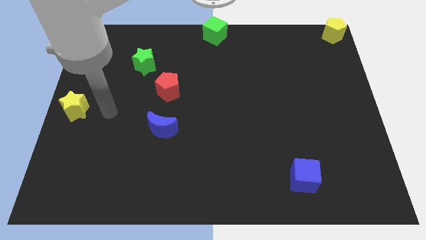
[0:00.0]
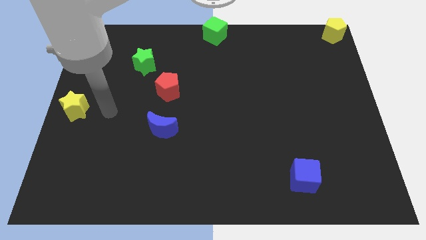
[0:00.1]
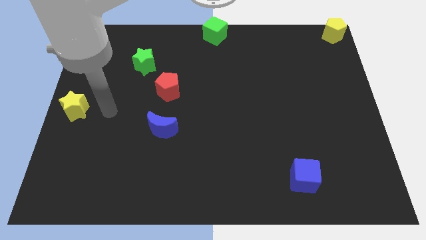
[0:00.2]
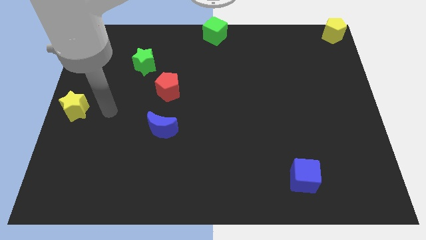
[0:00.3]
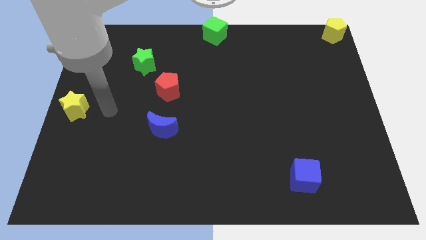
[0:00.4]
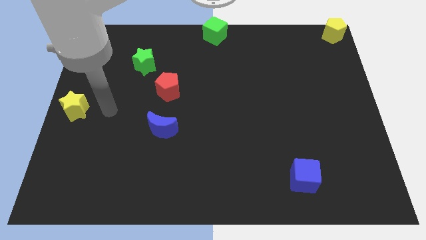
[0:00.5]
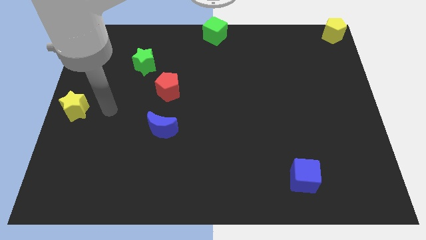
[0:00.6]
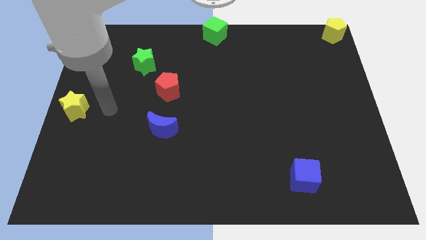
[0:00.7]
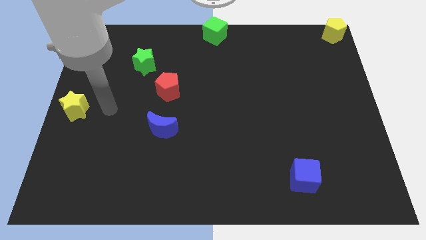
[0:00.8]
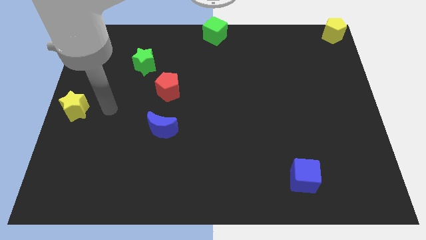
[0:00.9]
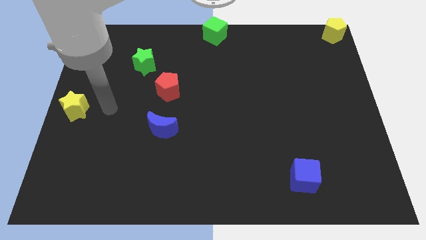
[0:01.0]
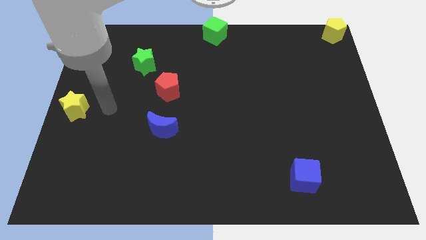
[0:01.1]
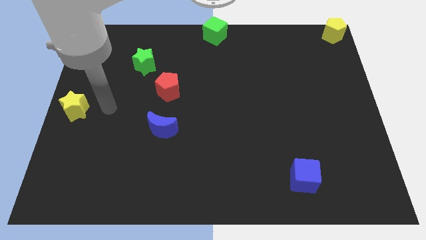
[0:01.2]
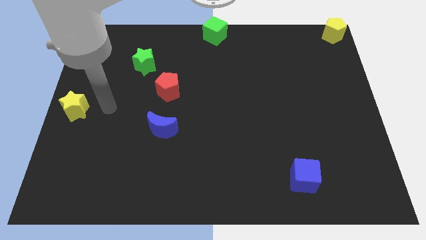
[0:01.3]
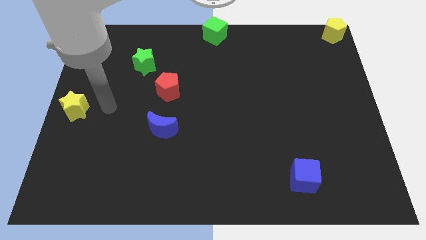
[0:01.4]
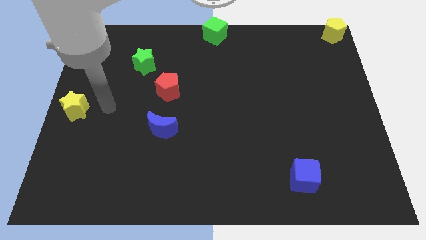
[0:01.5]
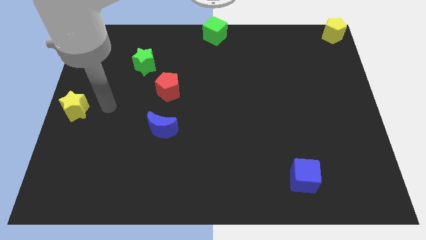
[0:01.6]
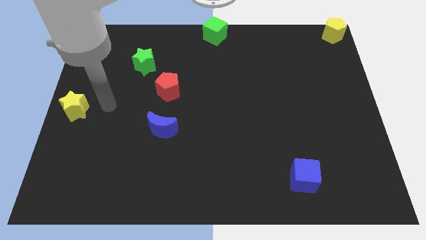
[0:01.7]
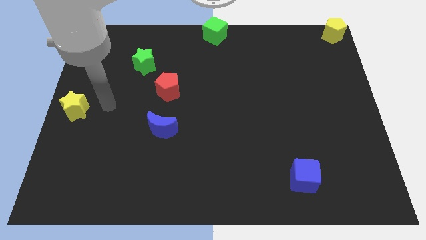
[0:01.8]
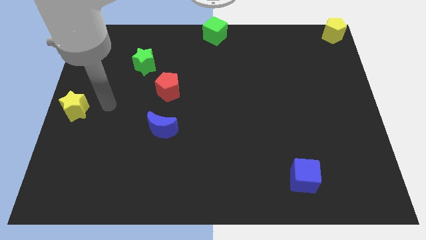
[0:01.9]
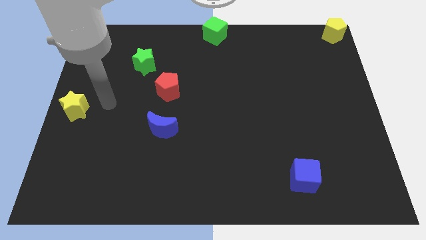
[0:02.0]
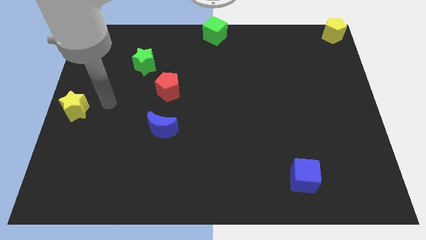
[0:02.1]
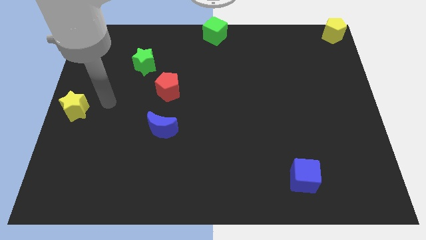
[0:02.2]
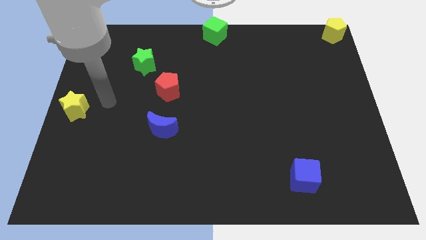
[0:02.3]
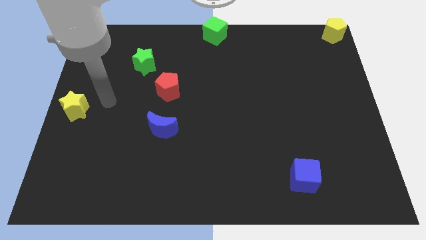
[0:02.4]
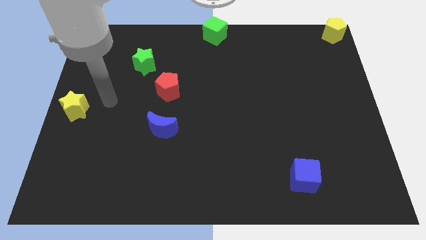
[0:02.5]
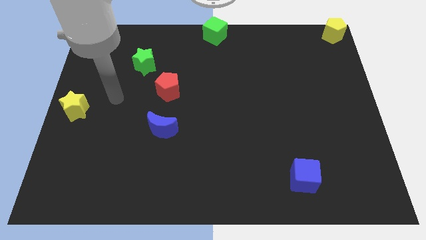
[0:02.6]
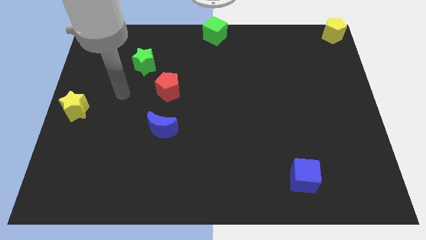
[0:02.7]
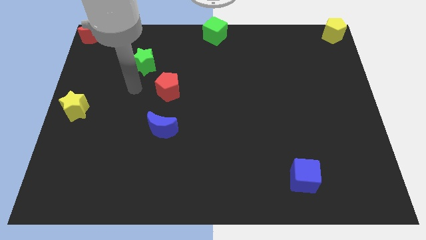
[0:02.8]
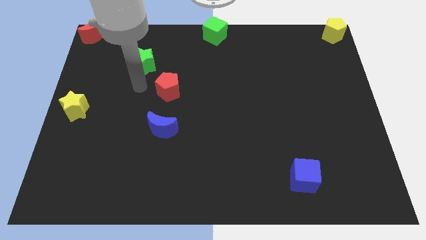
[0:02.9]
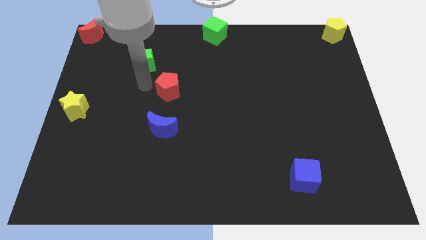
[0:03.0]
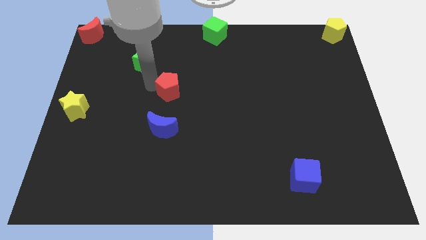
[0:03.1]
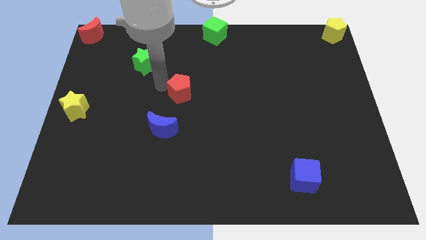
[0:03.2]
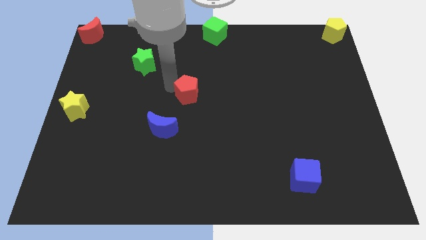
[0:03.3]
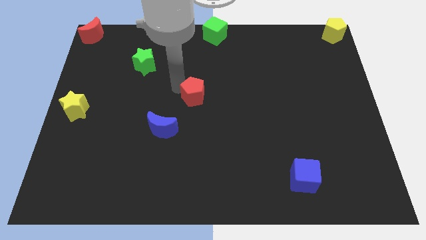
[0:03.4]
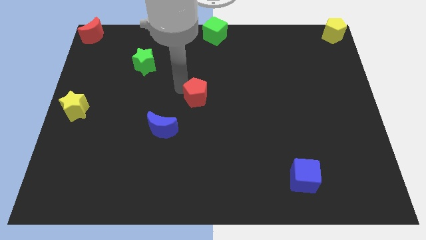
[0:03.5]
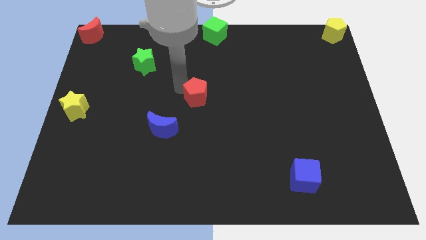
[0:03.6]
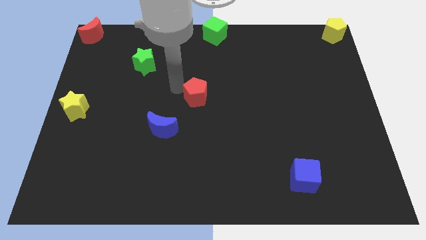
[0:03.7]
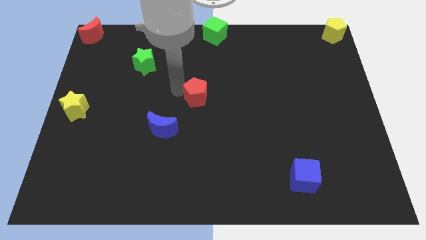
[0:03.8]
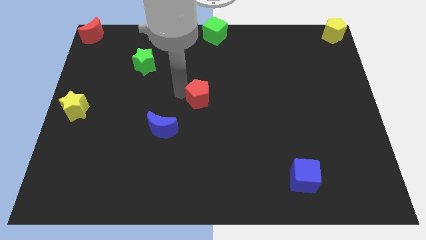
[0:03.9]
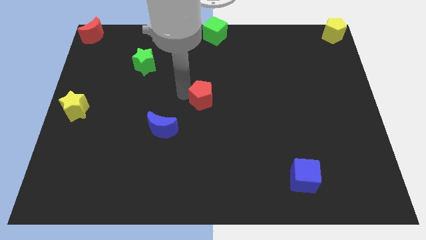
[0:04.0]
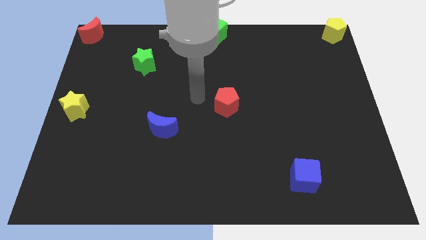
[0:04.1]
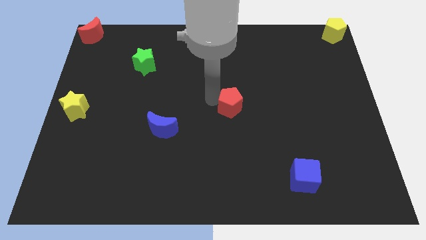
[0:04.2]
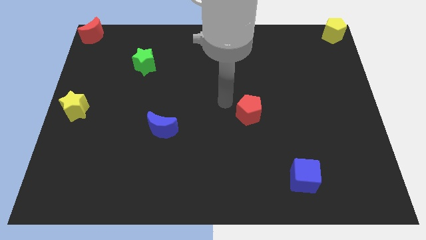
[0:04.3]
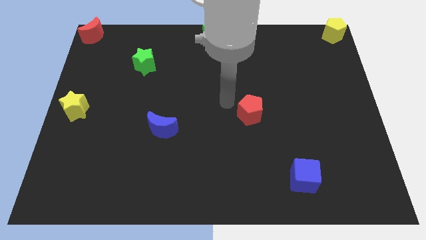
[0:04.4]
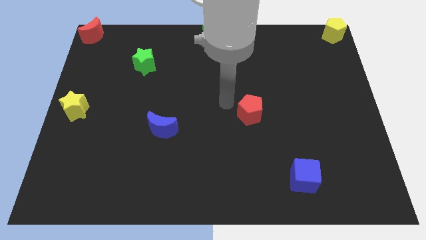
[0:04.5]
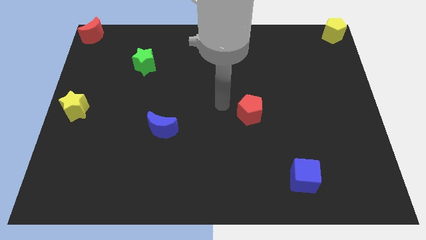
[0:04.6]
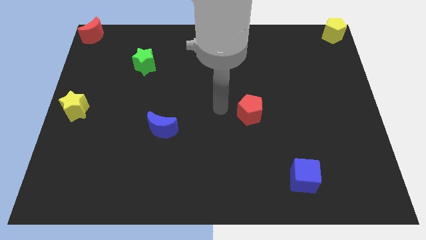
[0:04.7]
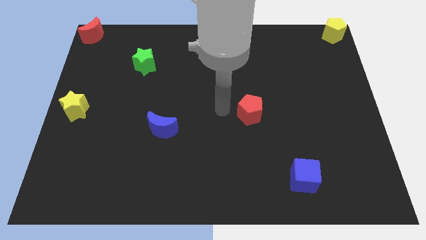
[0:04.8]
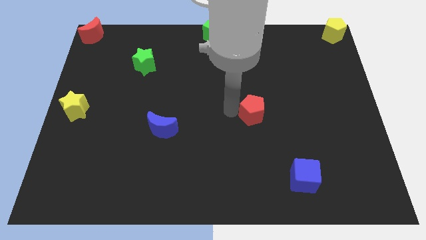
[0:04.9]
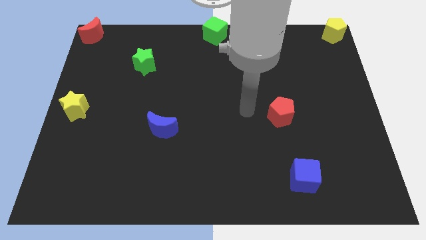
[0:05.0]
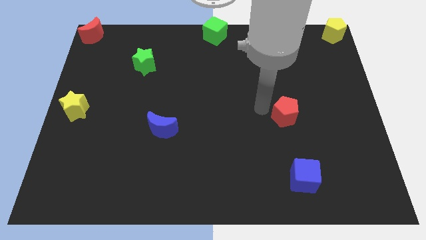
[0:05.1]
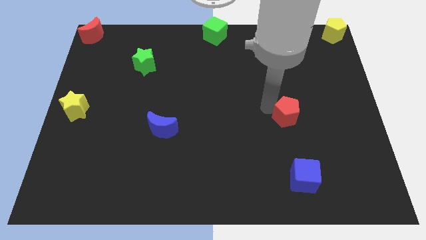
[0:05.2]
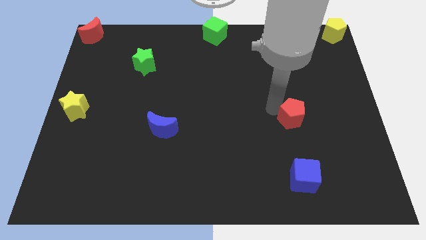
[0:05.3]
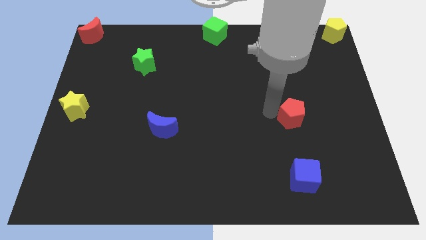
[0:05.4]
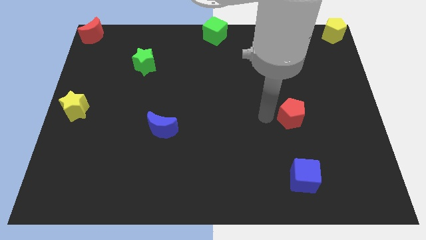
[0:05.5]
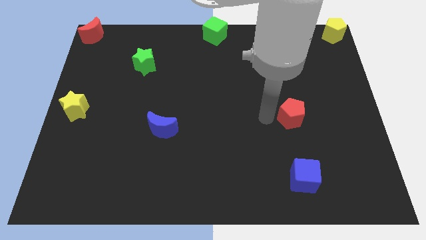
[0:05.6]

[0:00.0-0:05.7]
place the red pentagon vertically above the blue cube

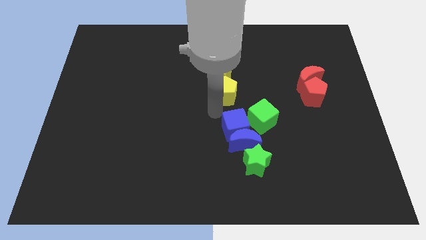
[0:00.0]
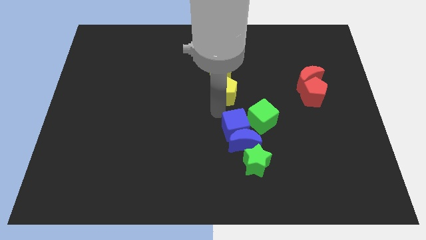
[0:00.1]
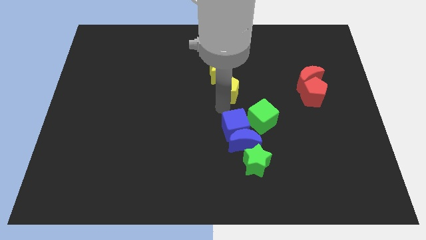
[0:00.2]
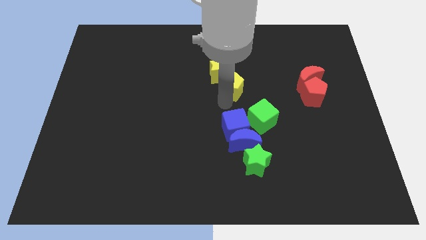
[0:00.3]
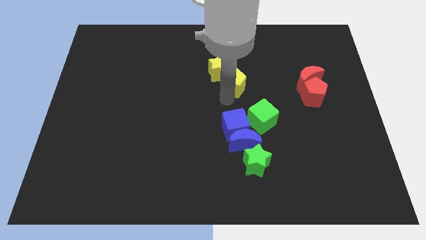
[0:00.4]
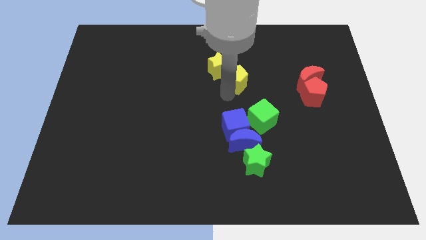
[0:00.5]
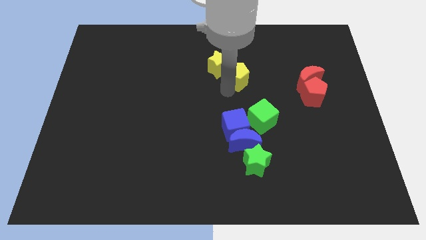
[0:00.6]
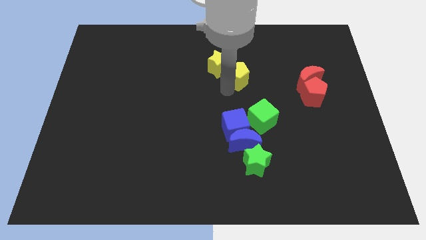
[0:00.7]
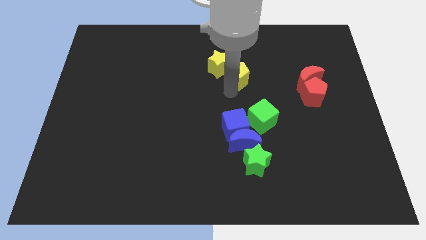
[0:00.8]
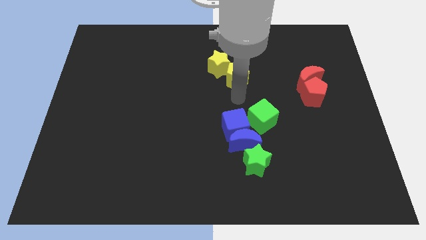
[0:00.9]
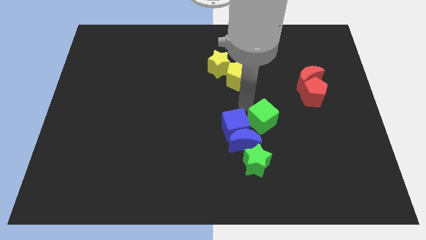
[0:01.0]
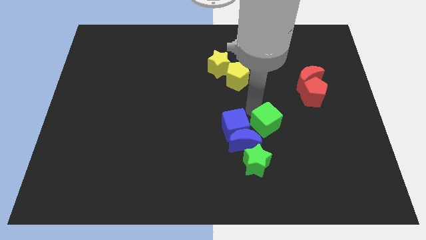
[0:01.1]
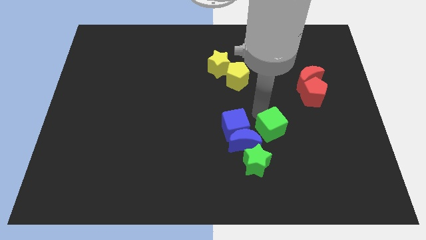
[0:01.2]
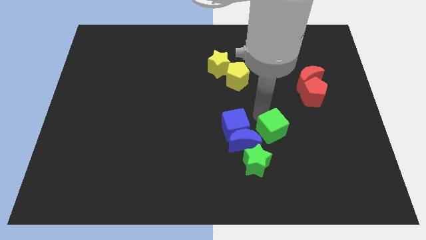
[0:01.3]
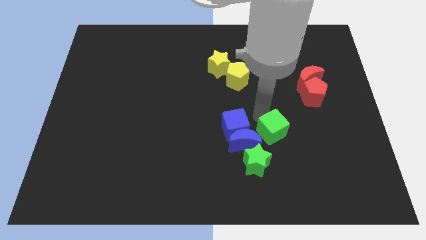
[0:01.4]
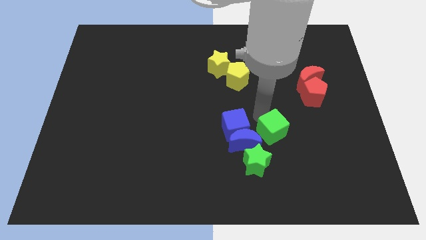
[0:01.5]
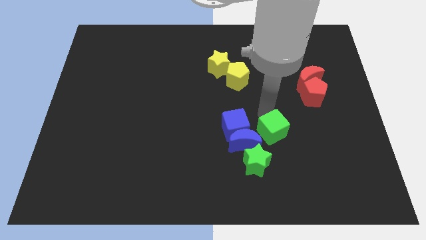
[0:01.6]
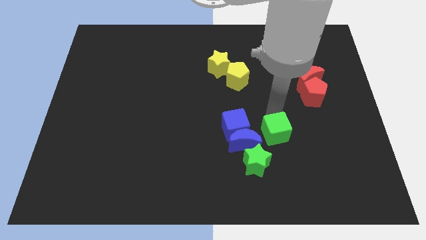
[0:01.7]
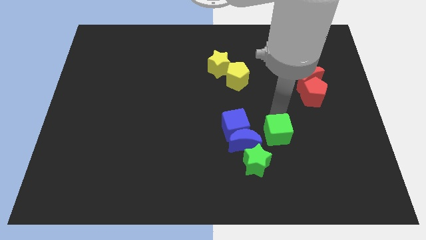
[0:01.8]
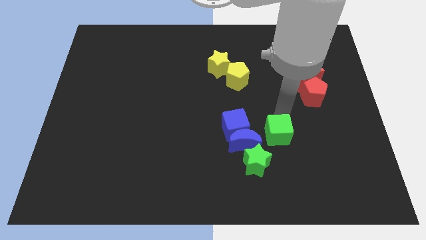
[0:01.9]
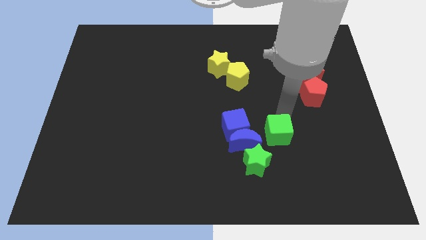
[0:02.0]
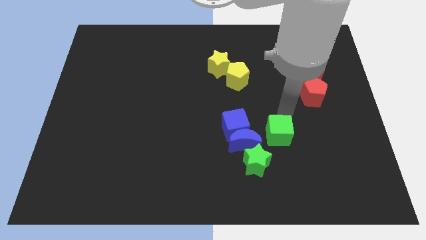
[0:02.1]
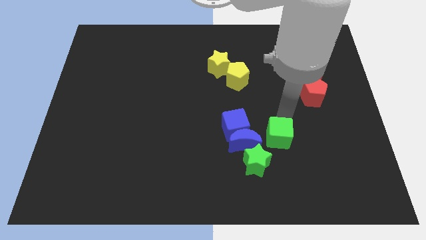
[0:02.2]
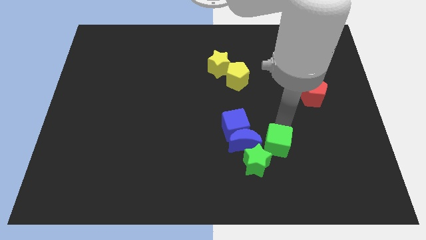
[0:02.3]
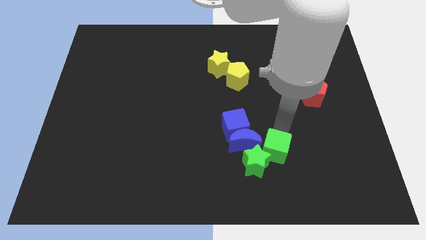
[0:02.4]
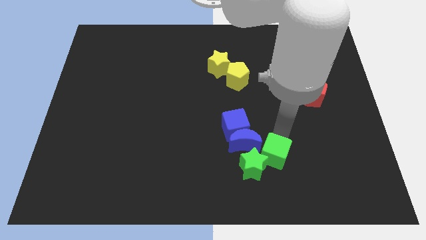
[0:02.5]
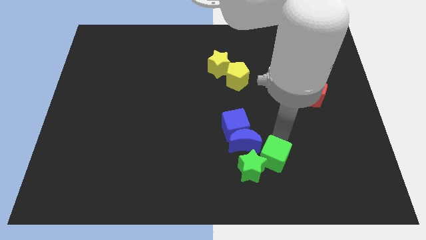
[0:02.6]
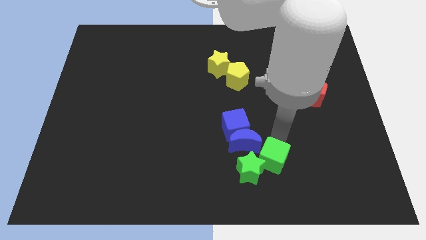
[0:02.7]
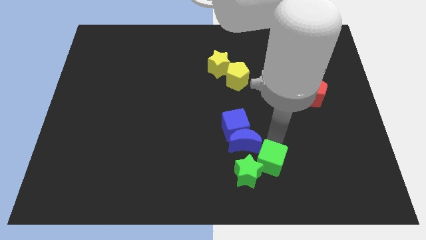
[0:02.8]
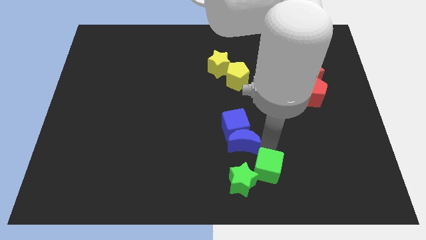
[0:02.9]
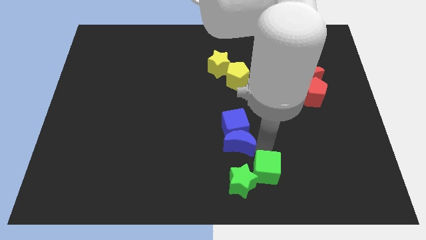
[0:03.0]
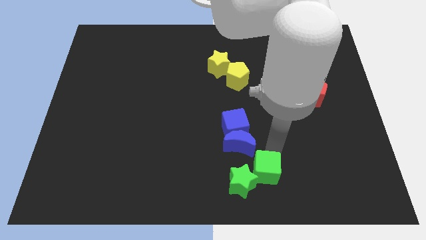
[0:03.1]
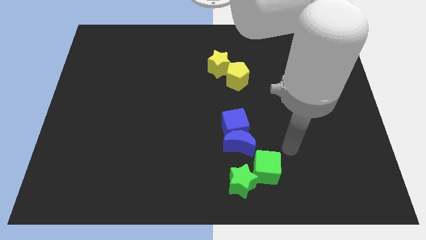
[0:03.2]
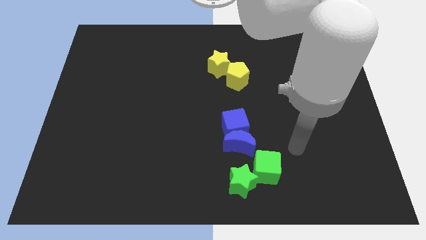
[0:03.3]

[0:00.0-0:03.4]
move the green cube into the green star
